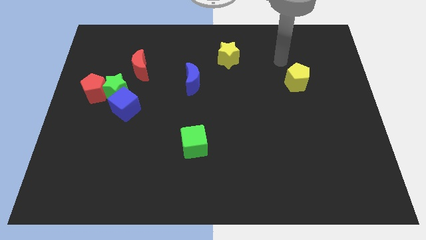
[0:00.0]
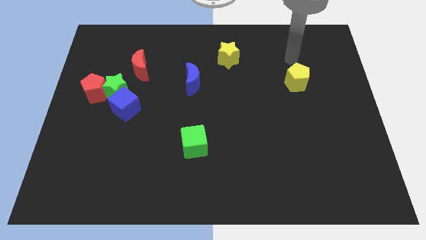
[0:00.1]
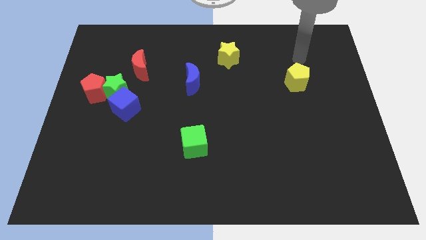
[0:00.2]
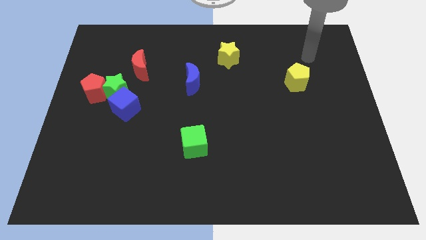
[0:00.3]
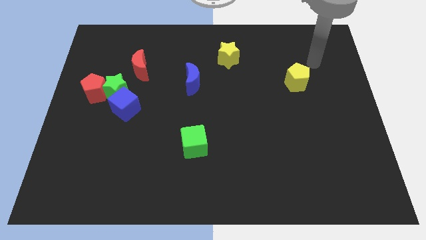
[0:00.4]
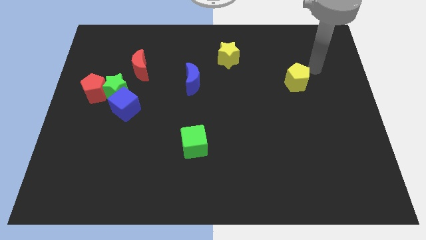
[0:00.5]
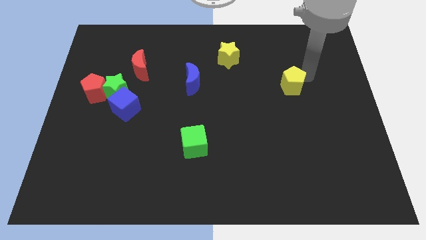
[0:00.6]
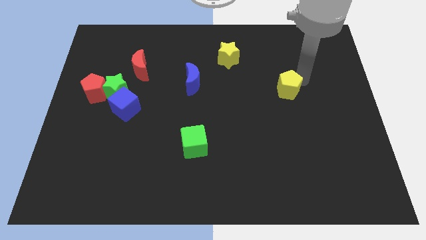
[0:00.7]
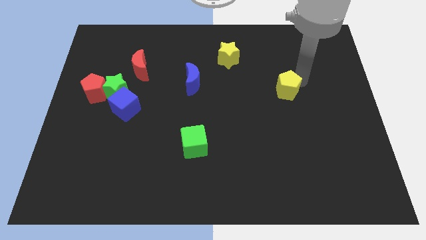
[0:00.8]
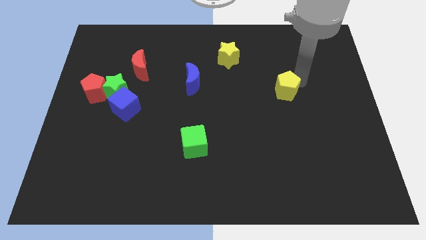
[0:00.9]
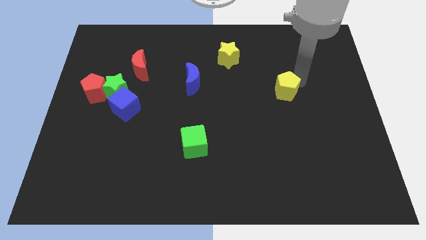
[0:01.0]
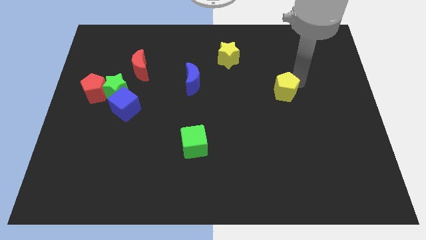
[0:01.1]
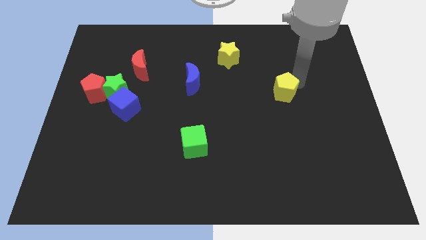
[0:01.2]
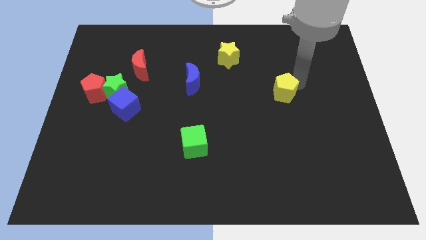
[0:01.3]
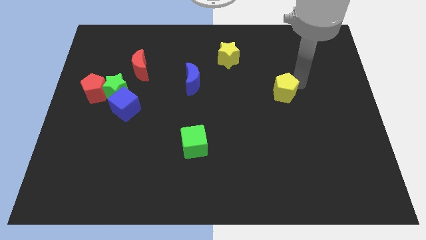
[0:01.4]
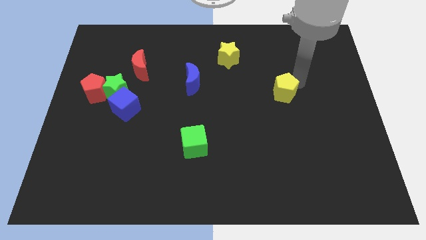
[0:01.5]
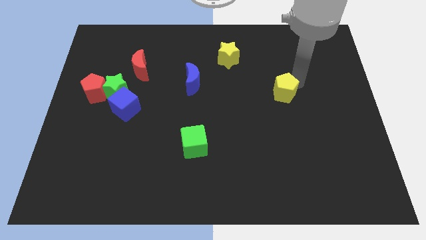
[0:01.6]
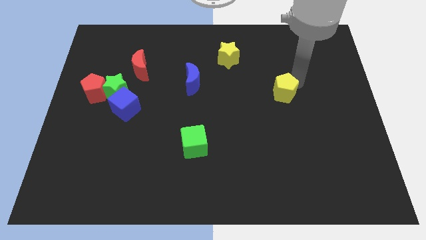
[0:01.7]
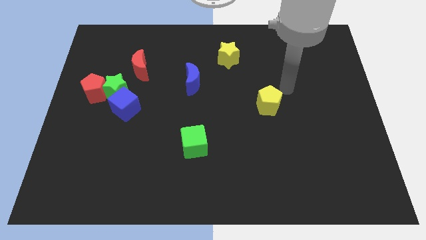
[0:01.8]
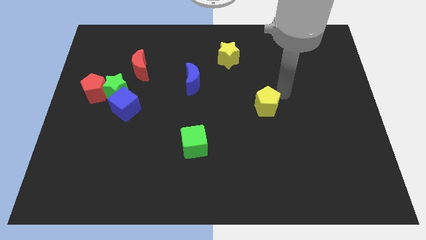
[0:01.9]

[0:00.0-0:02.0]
push yellow pentagon diagonally towards yellow star

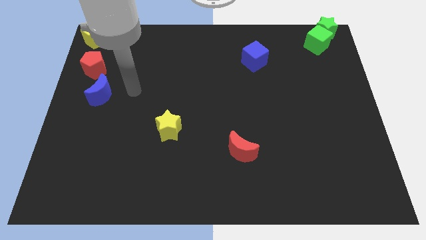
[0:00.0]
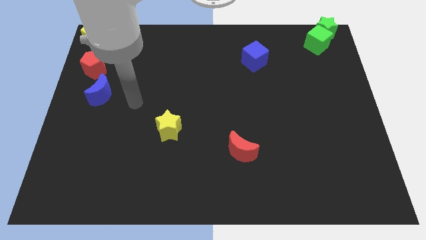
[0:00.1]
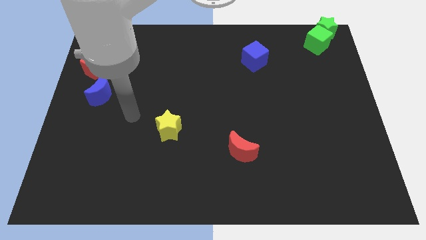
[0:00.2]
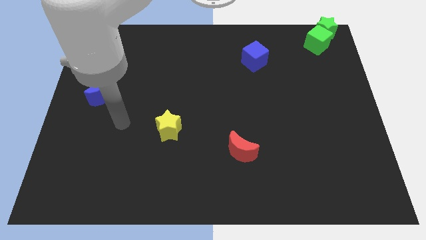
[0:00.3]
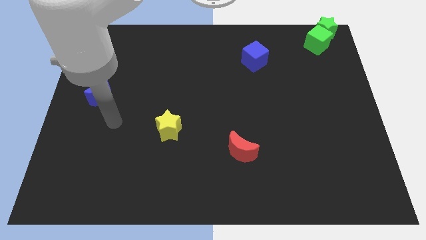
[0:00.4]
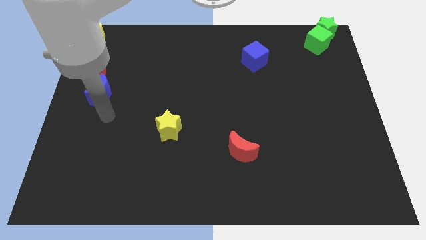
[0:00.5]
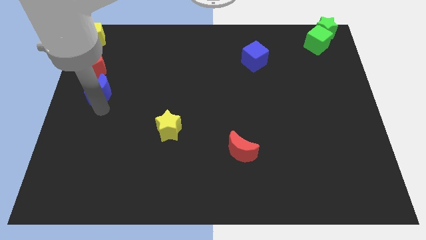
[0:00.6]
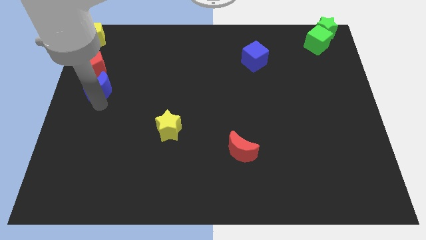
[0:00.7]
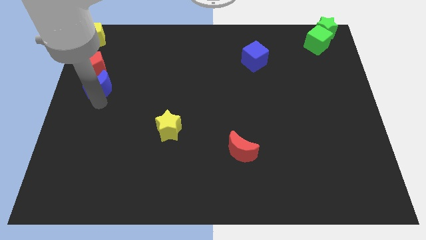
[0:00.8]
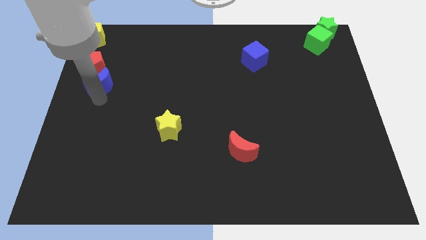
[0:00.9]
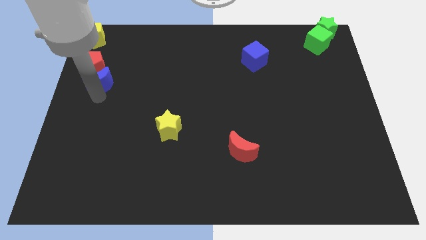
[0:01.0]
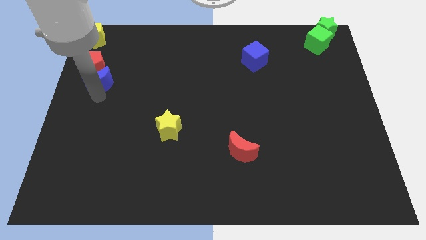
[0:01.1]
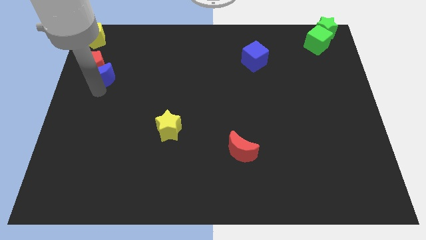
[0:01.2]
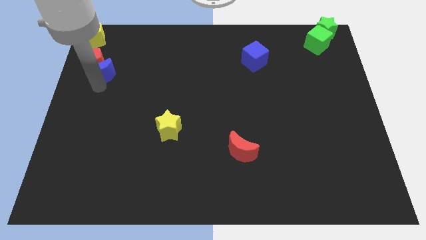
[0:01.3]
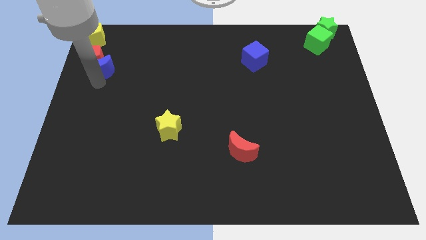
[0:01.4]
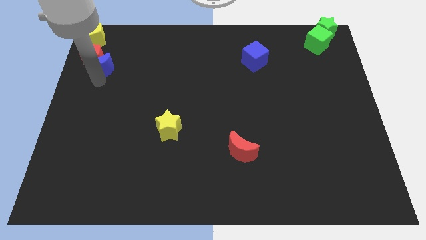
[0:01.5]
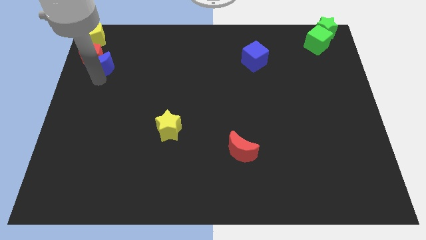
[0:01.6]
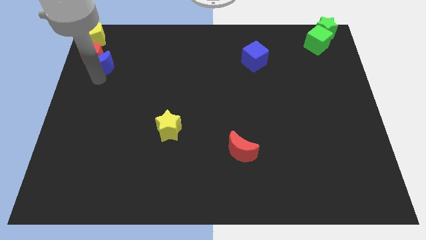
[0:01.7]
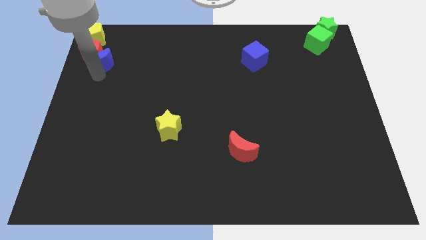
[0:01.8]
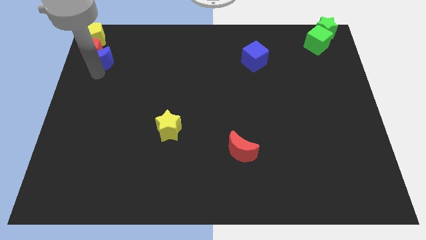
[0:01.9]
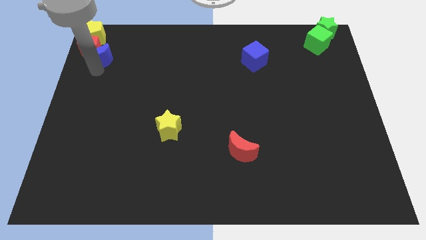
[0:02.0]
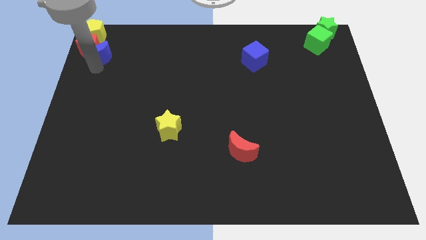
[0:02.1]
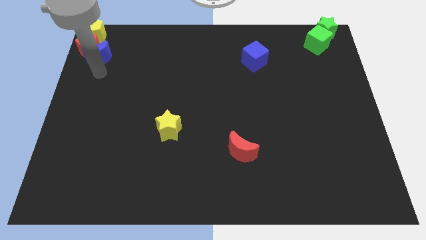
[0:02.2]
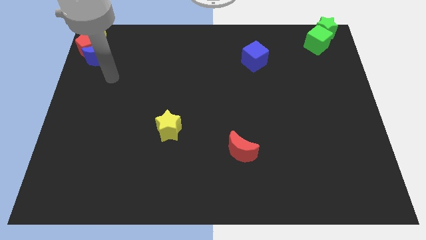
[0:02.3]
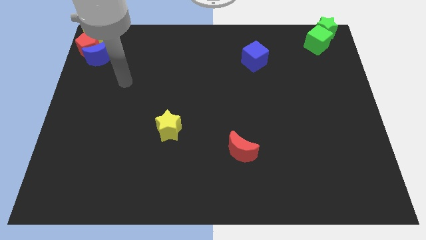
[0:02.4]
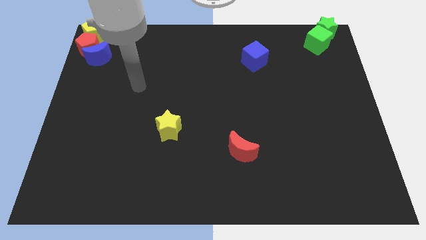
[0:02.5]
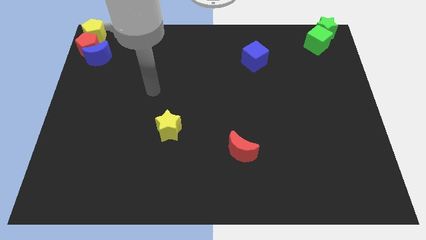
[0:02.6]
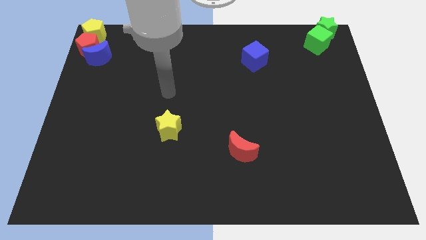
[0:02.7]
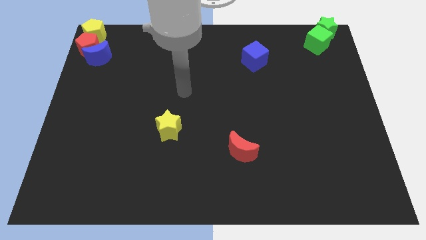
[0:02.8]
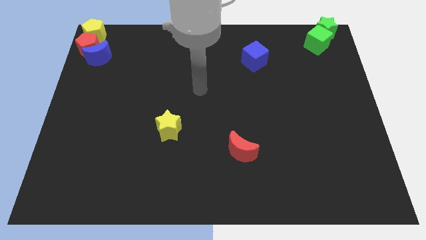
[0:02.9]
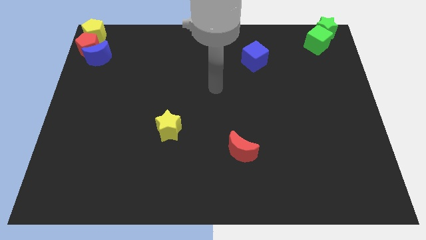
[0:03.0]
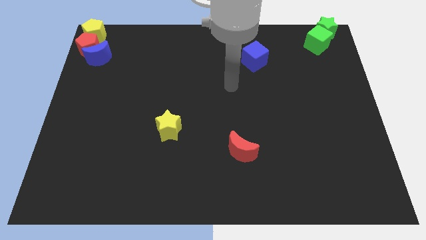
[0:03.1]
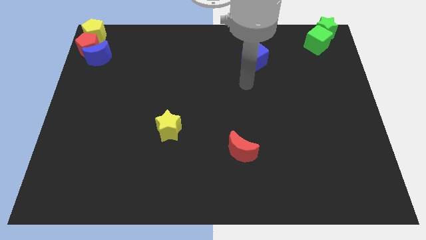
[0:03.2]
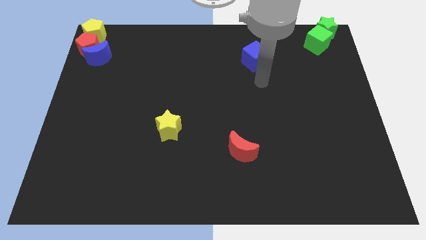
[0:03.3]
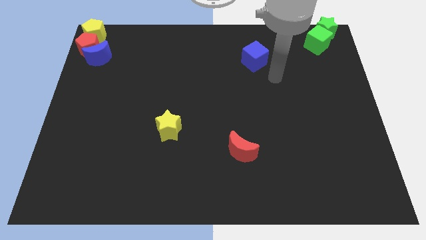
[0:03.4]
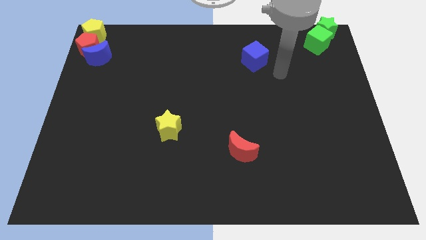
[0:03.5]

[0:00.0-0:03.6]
group up the blue crescent red pentagon and yelllow pentagon at the top left of the board

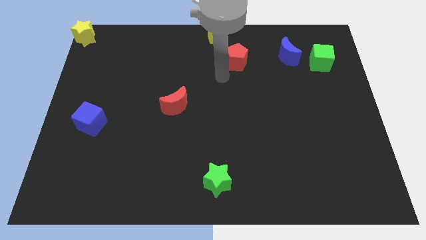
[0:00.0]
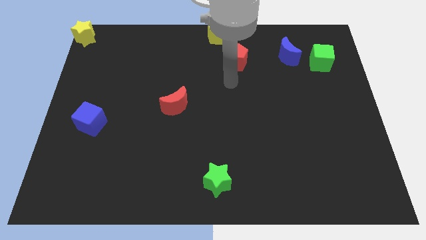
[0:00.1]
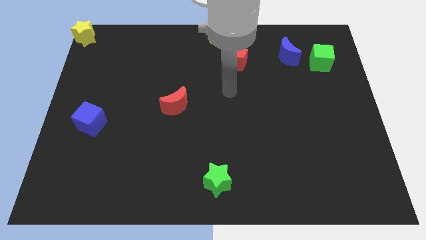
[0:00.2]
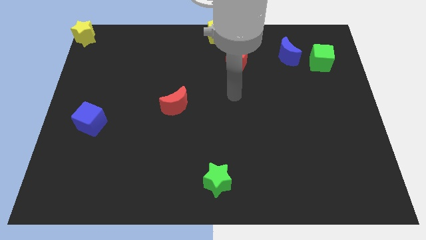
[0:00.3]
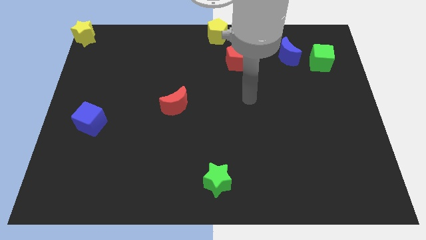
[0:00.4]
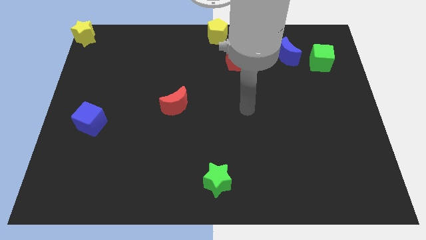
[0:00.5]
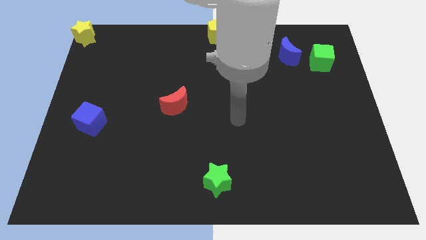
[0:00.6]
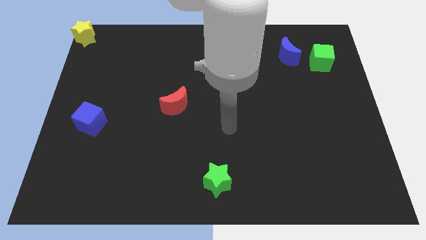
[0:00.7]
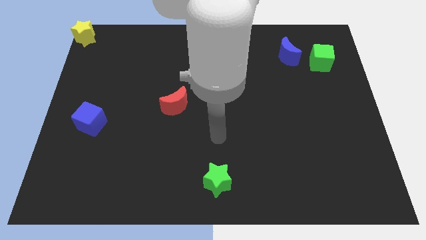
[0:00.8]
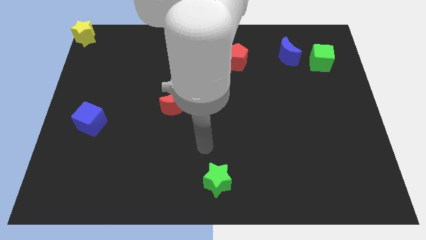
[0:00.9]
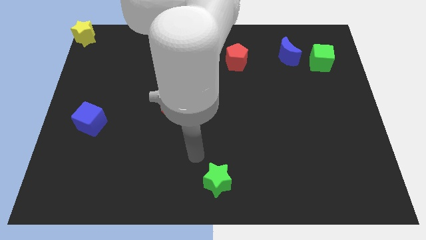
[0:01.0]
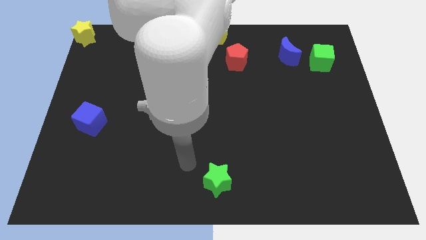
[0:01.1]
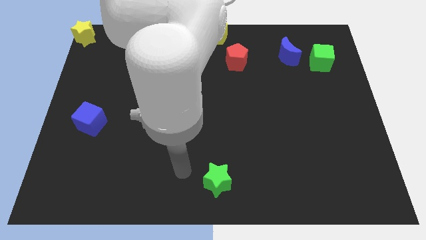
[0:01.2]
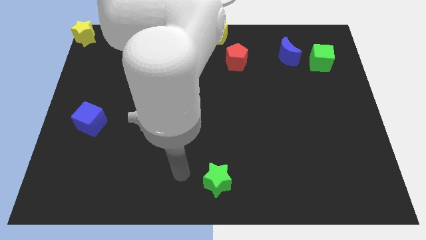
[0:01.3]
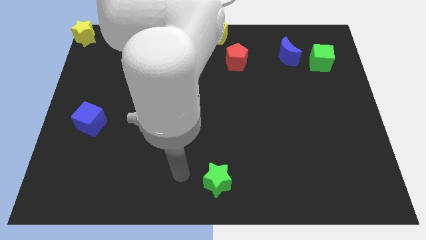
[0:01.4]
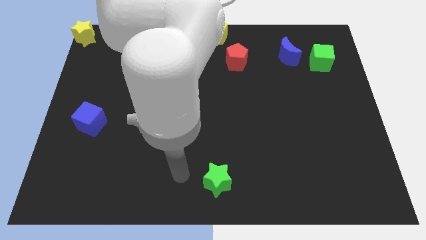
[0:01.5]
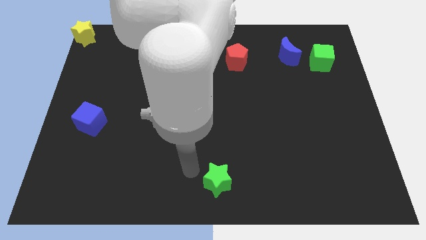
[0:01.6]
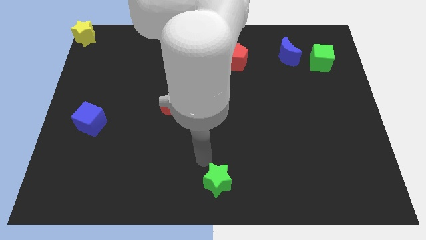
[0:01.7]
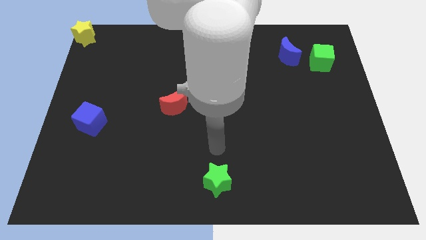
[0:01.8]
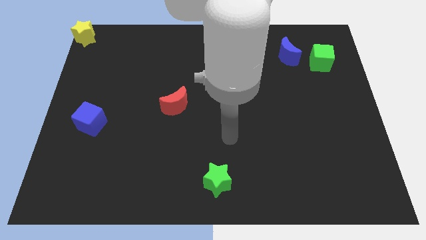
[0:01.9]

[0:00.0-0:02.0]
move the arm away from the red pentagon

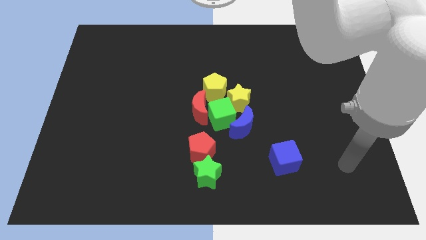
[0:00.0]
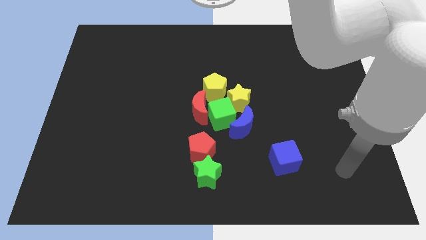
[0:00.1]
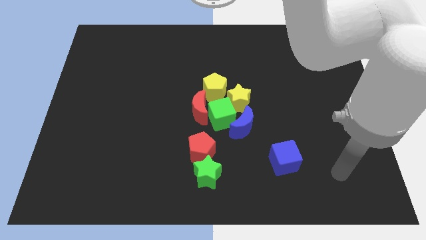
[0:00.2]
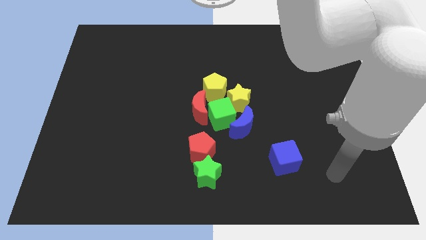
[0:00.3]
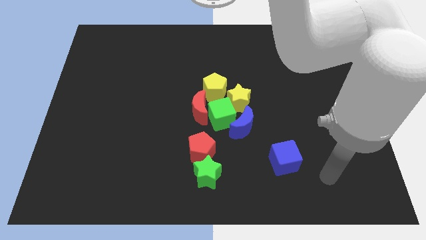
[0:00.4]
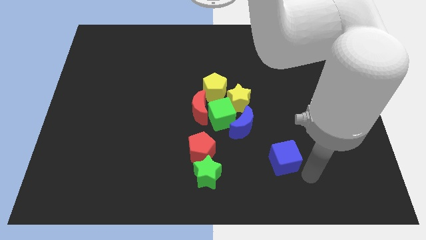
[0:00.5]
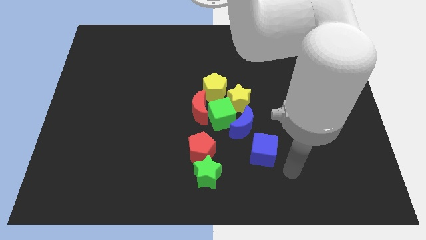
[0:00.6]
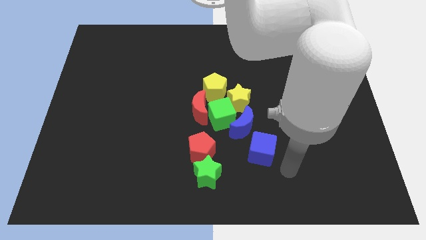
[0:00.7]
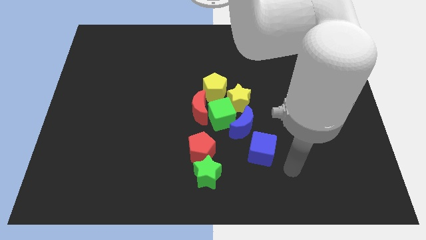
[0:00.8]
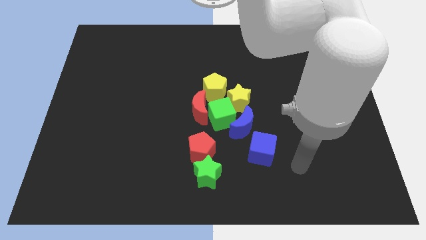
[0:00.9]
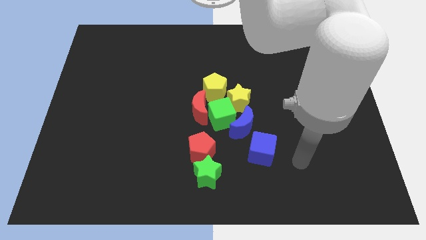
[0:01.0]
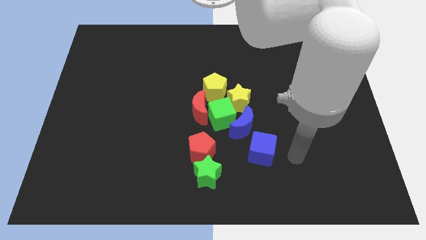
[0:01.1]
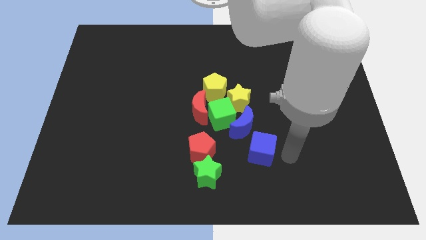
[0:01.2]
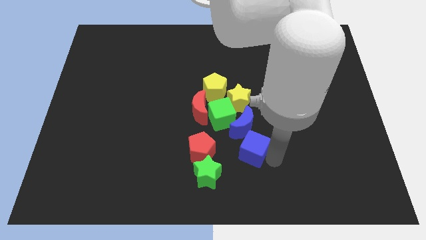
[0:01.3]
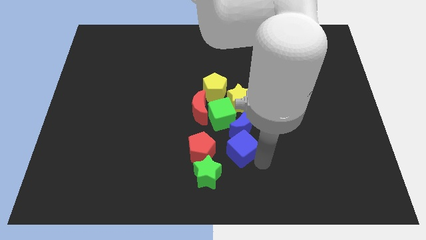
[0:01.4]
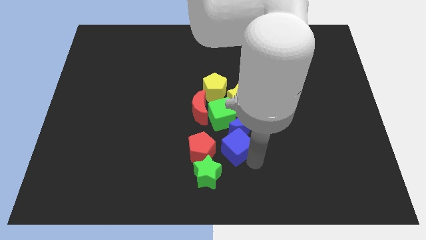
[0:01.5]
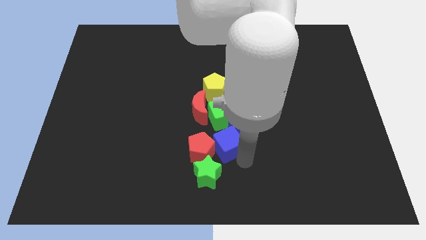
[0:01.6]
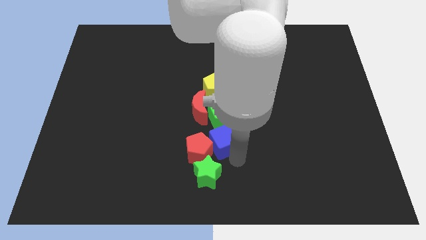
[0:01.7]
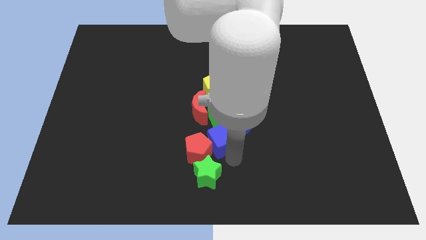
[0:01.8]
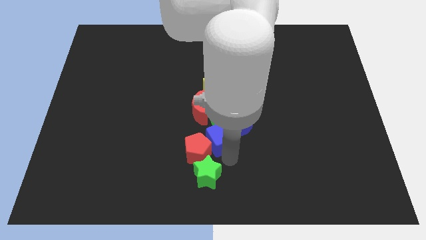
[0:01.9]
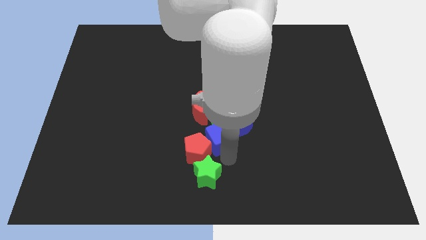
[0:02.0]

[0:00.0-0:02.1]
place the blue cube between the red pentagon and blue moon
